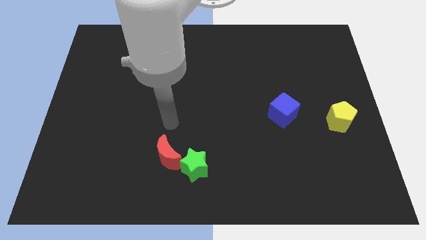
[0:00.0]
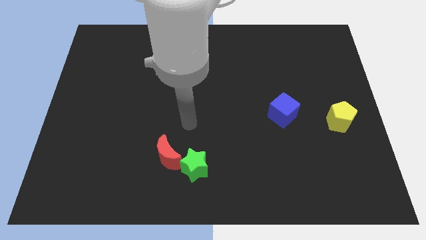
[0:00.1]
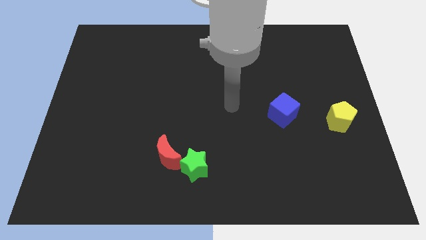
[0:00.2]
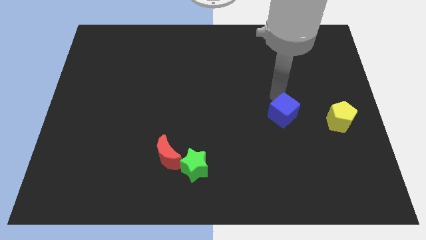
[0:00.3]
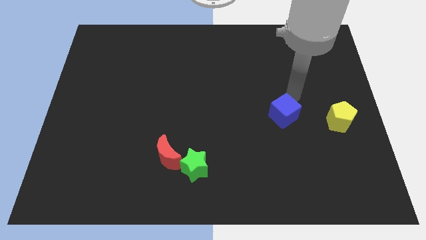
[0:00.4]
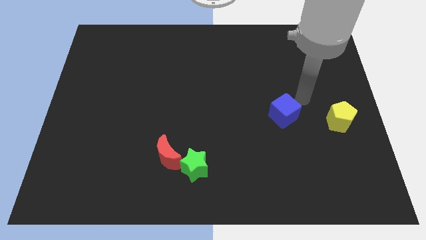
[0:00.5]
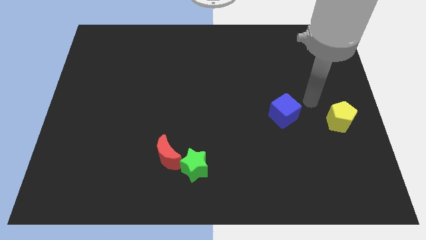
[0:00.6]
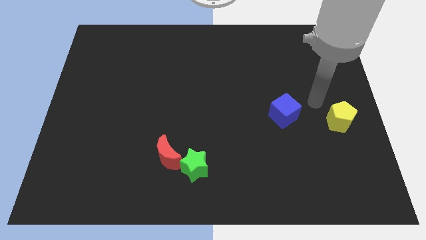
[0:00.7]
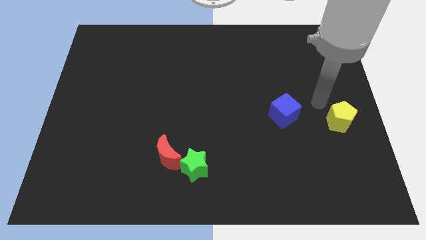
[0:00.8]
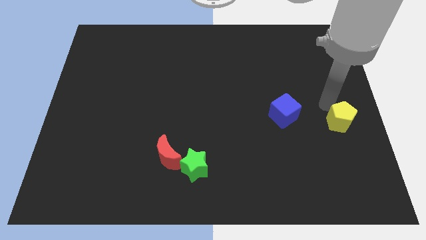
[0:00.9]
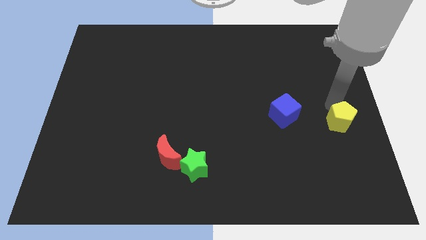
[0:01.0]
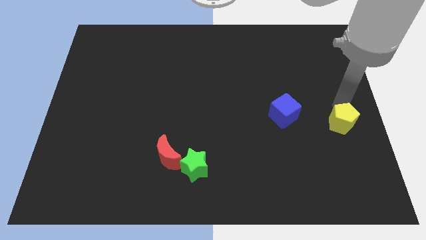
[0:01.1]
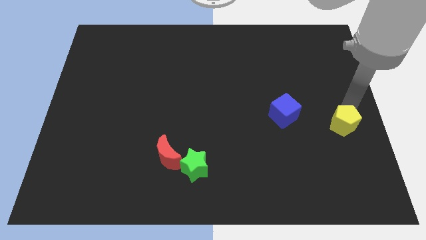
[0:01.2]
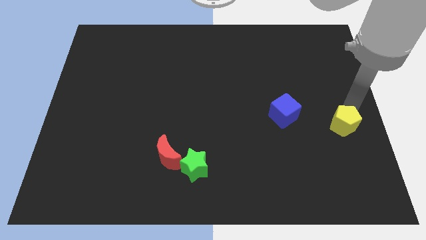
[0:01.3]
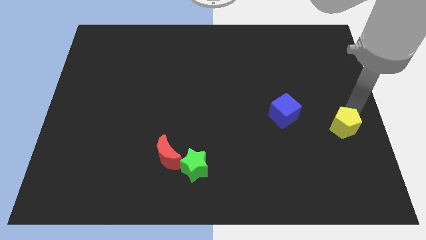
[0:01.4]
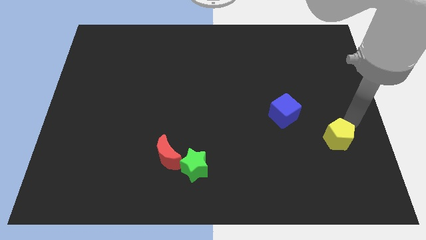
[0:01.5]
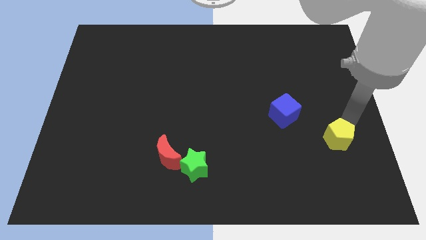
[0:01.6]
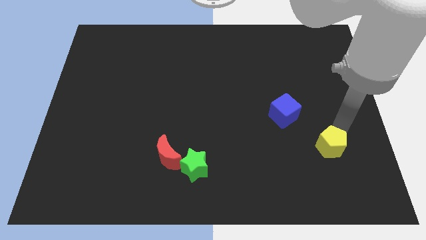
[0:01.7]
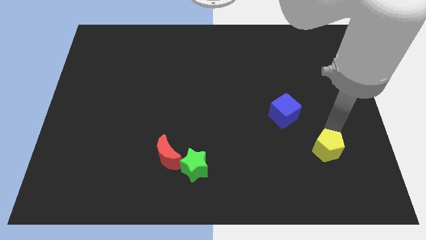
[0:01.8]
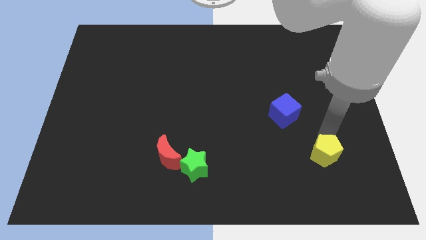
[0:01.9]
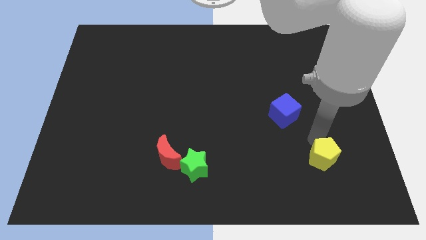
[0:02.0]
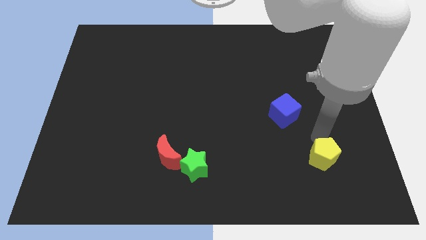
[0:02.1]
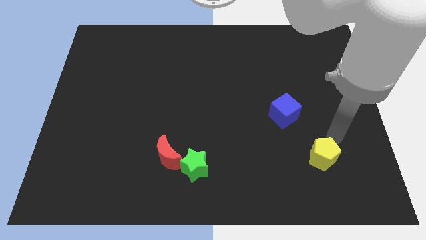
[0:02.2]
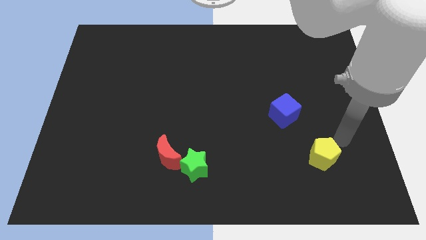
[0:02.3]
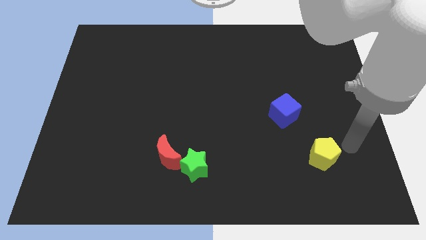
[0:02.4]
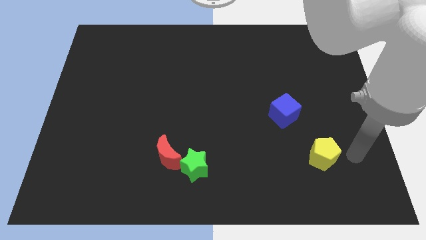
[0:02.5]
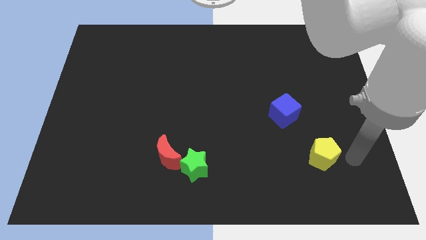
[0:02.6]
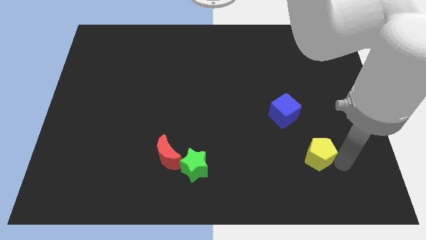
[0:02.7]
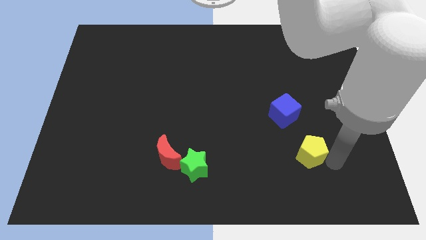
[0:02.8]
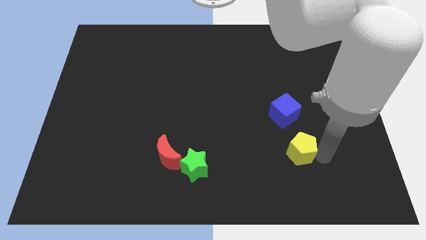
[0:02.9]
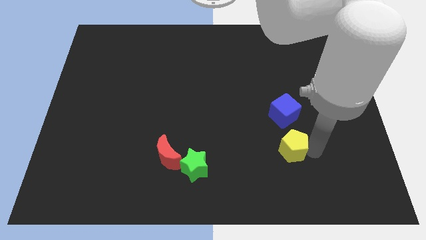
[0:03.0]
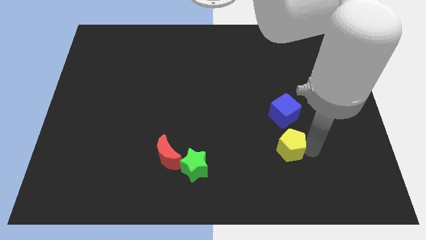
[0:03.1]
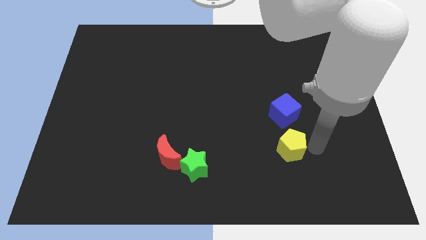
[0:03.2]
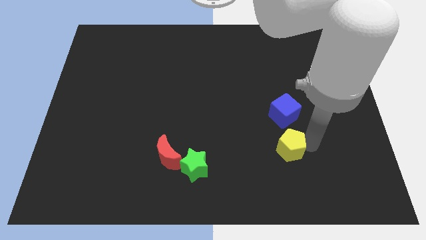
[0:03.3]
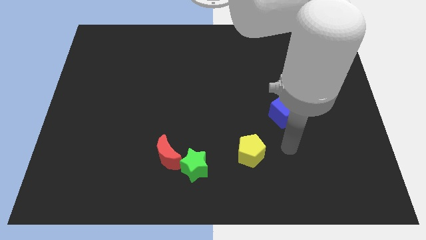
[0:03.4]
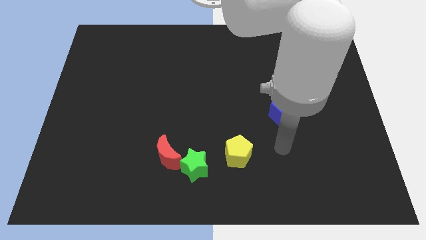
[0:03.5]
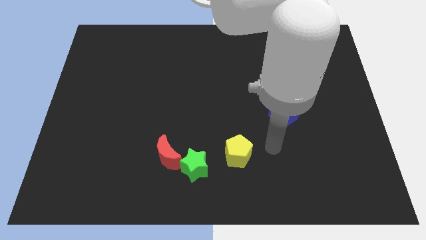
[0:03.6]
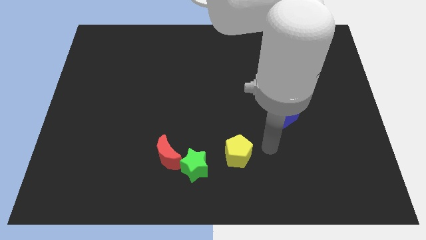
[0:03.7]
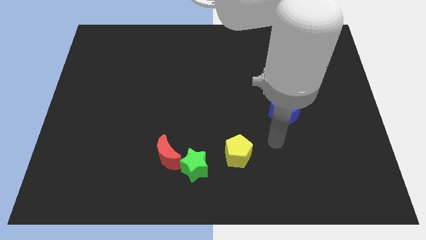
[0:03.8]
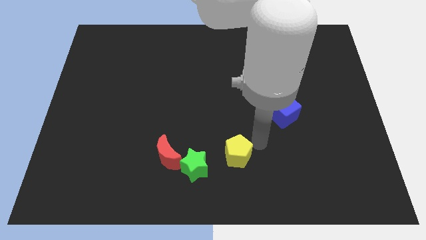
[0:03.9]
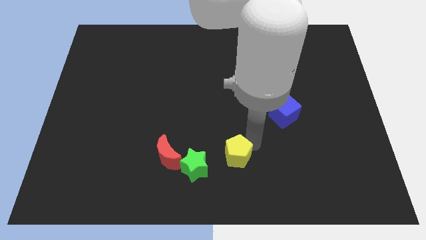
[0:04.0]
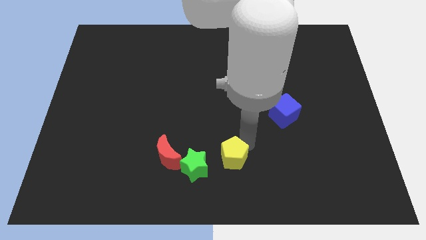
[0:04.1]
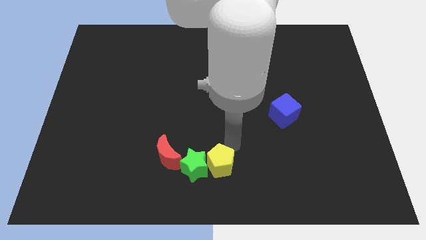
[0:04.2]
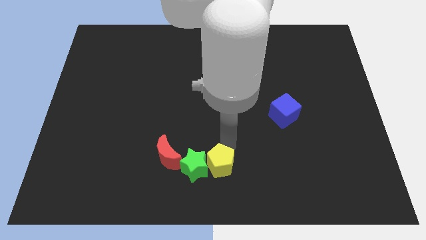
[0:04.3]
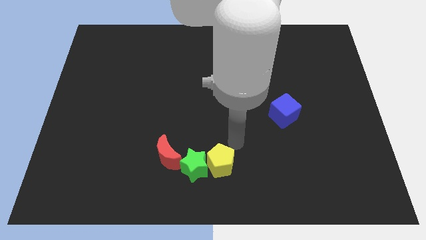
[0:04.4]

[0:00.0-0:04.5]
slide the yellow block to the star

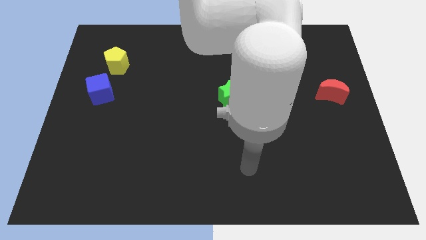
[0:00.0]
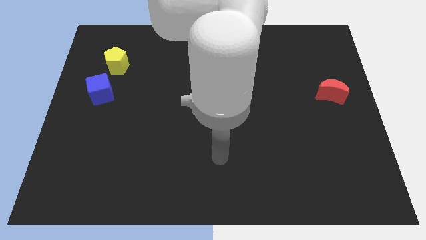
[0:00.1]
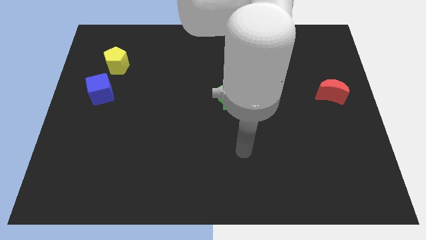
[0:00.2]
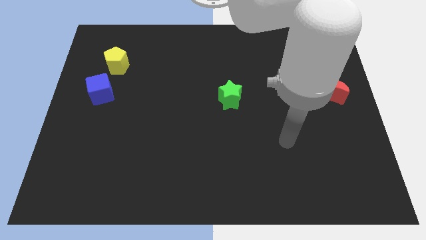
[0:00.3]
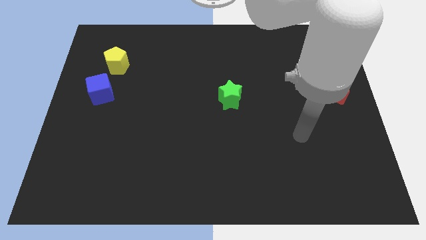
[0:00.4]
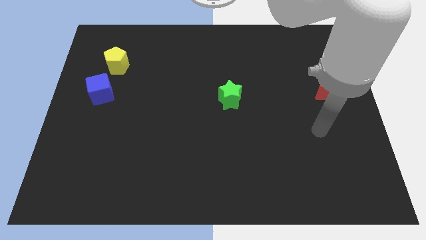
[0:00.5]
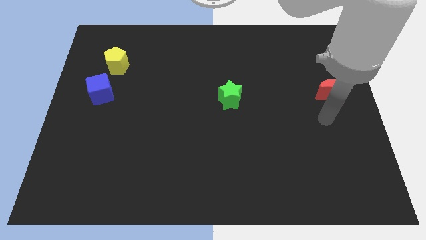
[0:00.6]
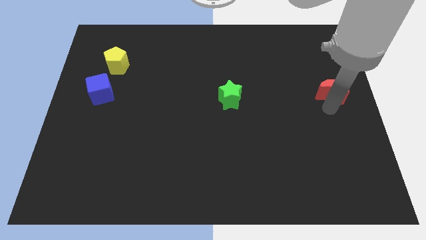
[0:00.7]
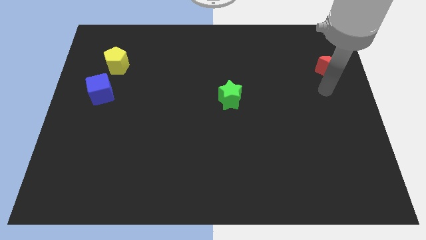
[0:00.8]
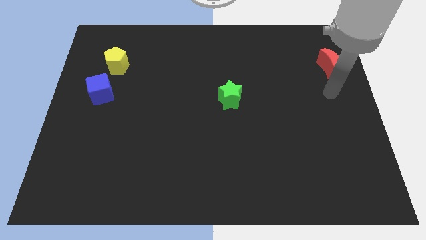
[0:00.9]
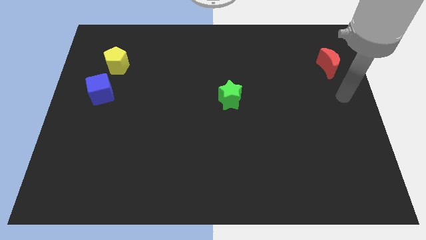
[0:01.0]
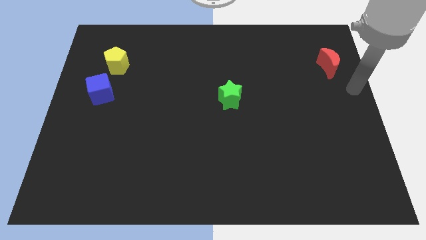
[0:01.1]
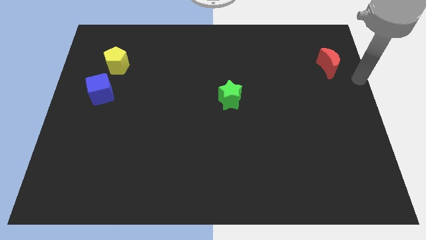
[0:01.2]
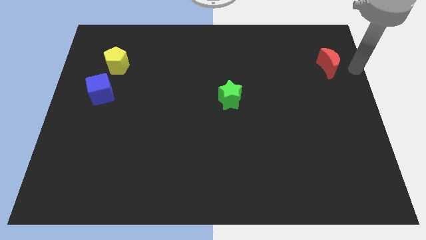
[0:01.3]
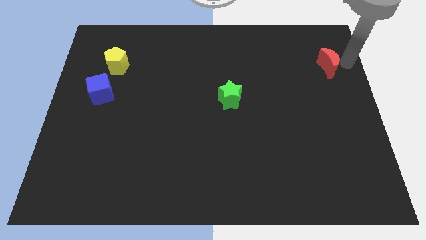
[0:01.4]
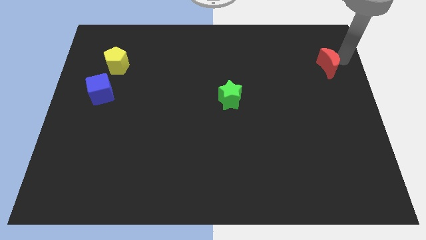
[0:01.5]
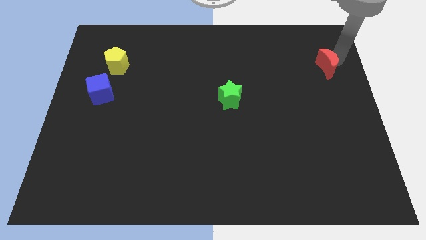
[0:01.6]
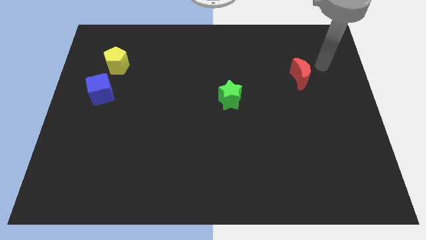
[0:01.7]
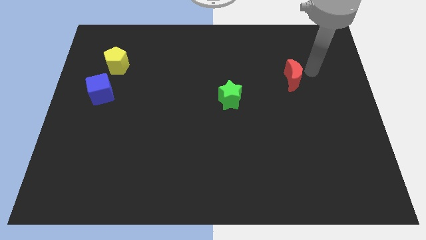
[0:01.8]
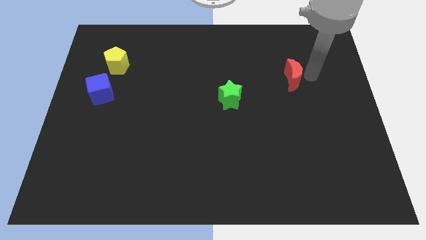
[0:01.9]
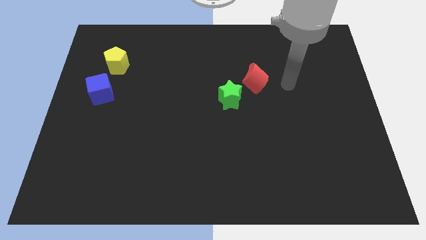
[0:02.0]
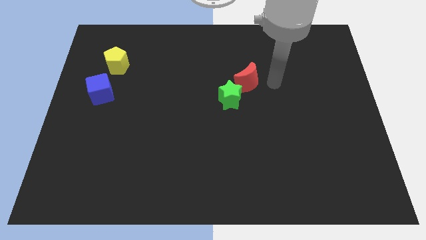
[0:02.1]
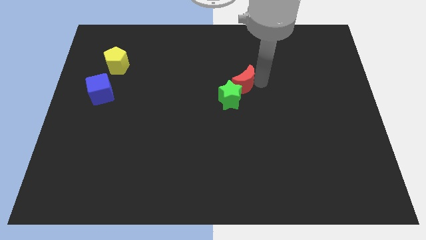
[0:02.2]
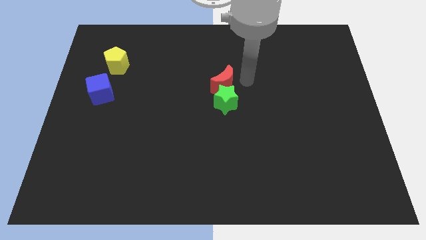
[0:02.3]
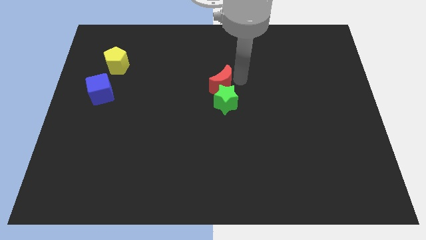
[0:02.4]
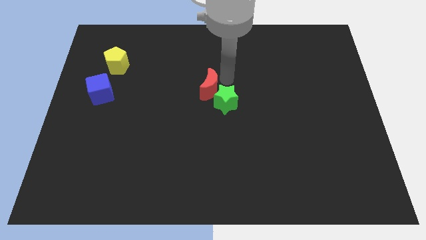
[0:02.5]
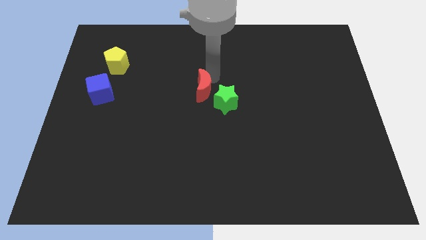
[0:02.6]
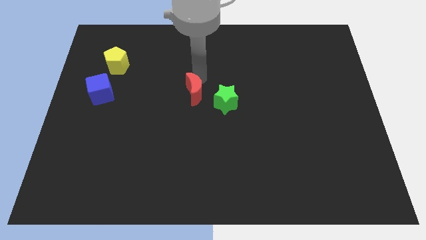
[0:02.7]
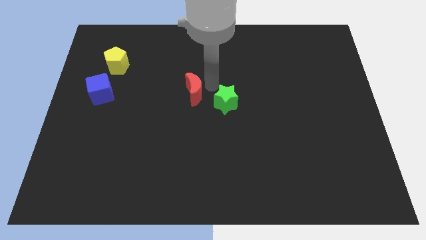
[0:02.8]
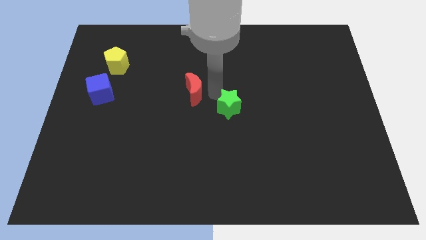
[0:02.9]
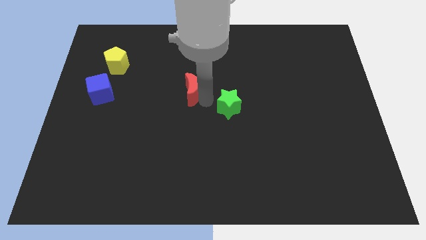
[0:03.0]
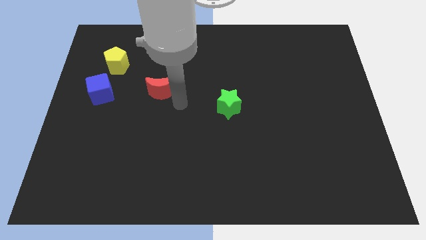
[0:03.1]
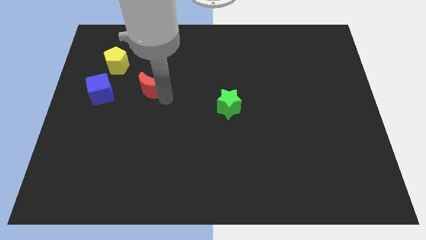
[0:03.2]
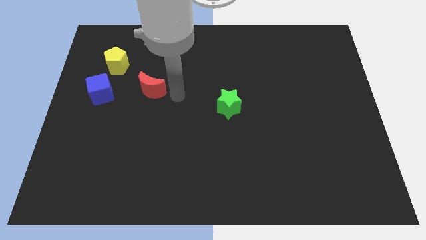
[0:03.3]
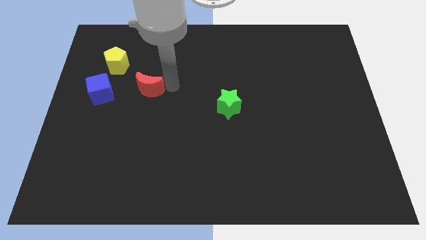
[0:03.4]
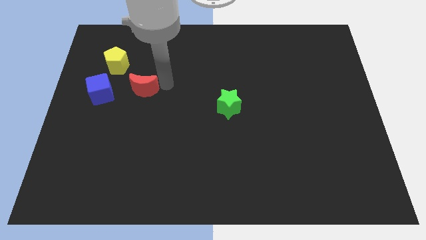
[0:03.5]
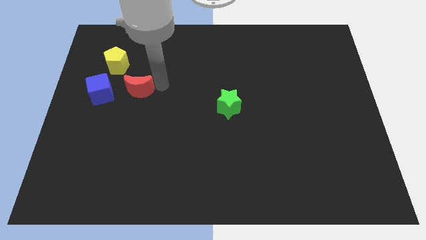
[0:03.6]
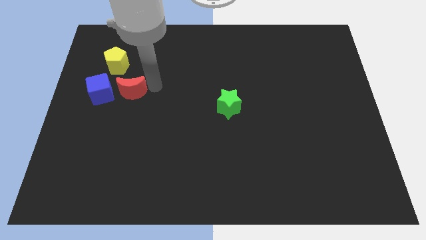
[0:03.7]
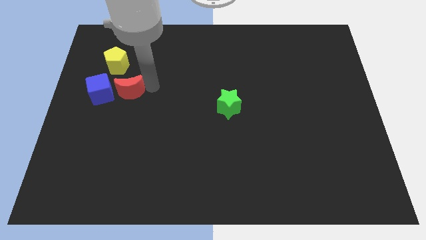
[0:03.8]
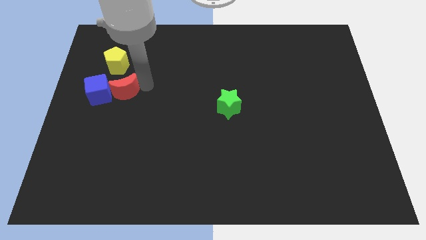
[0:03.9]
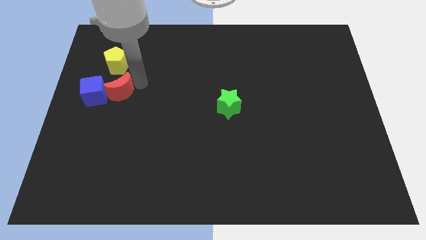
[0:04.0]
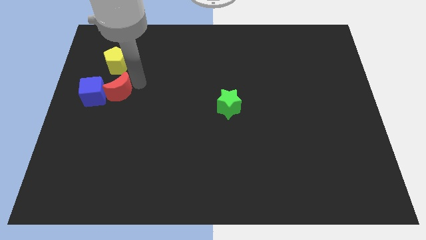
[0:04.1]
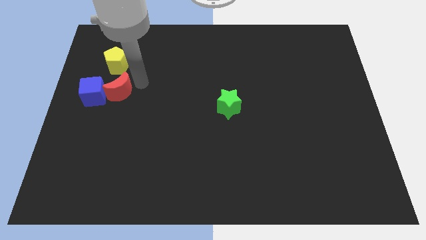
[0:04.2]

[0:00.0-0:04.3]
move the red block close to the blue cube
